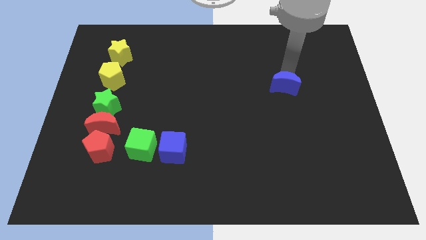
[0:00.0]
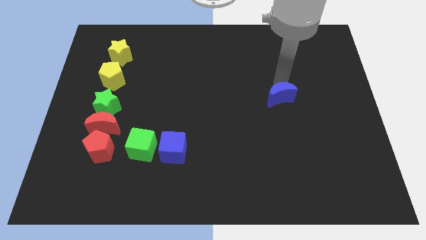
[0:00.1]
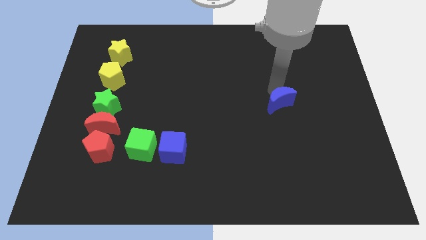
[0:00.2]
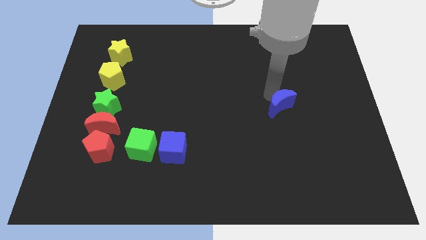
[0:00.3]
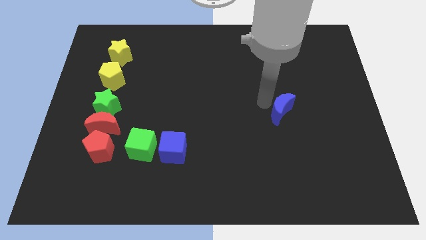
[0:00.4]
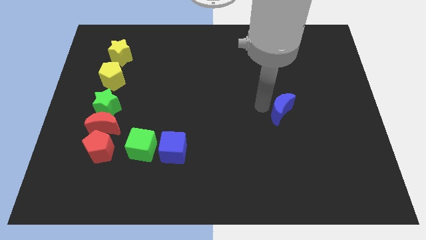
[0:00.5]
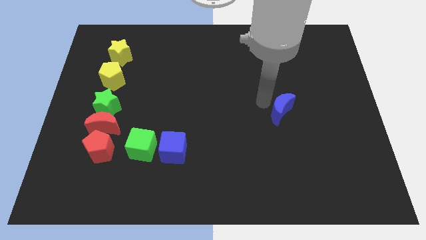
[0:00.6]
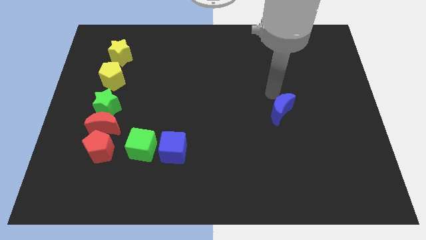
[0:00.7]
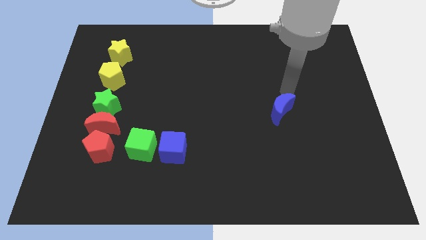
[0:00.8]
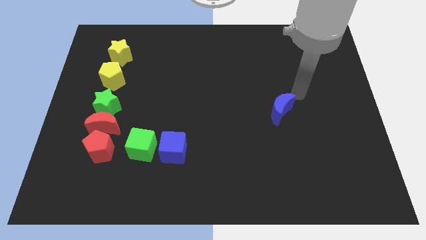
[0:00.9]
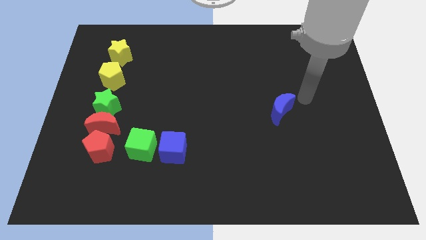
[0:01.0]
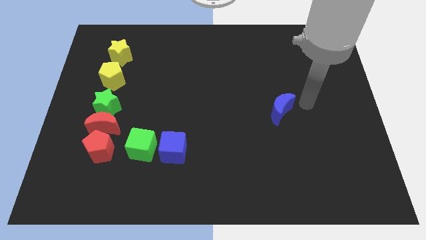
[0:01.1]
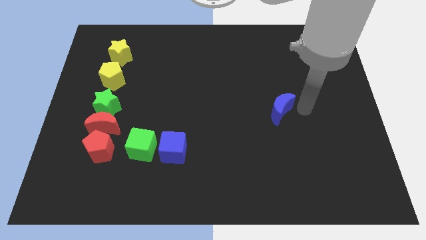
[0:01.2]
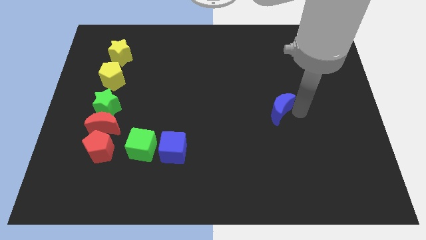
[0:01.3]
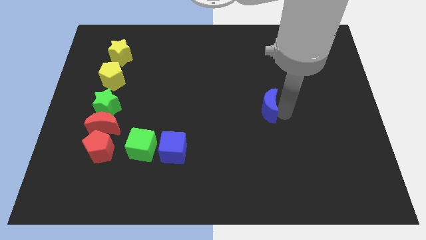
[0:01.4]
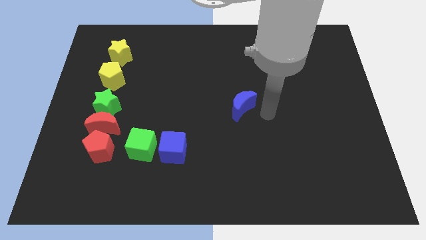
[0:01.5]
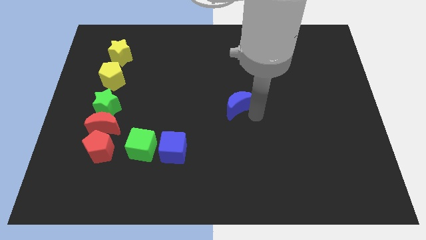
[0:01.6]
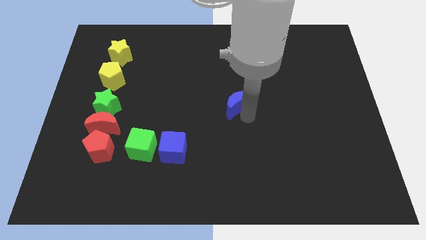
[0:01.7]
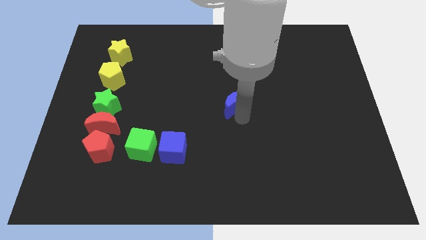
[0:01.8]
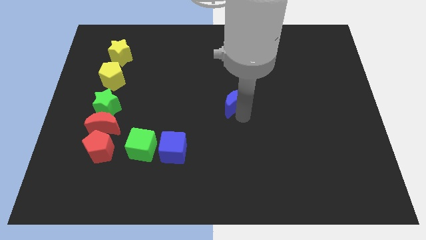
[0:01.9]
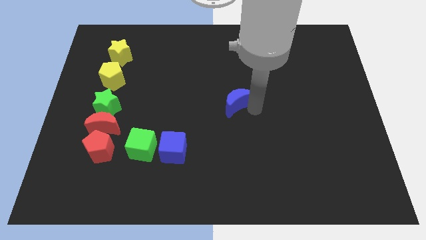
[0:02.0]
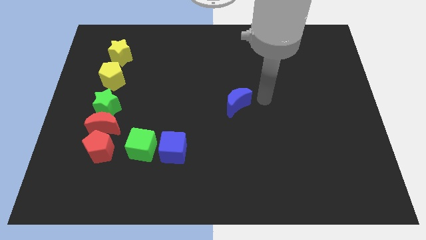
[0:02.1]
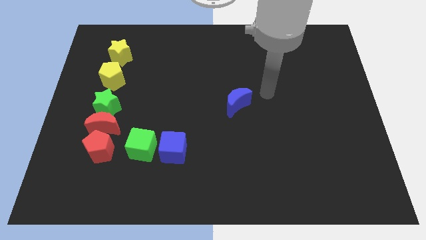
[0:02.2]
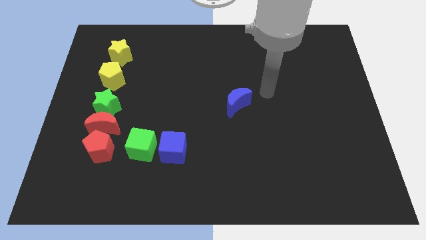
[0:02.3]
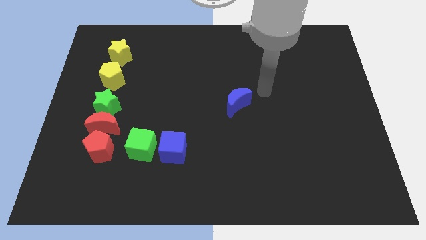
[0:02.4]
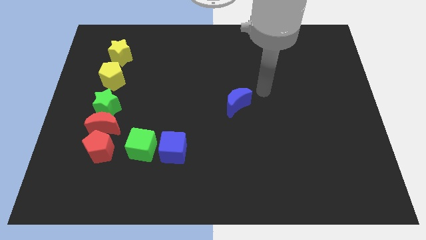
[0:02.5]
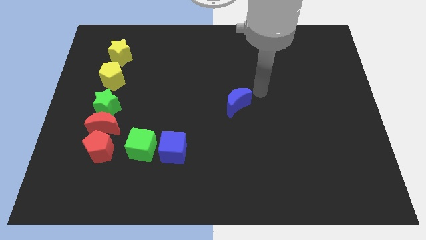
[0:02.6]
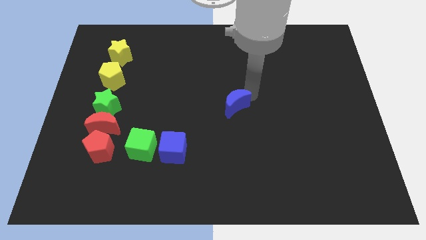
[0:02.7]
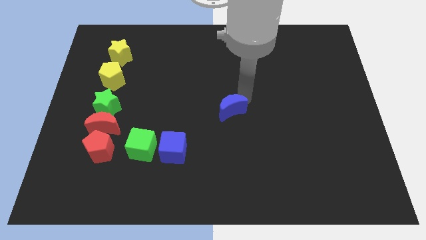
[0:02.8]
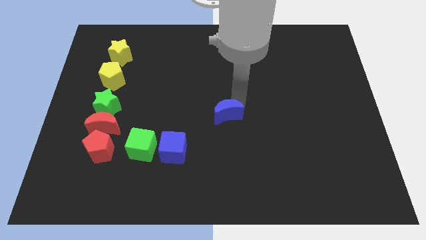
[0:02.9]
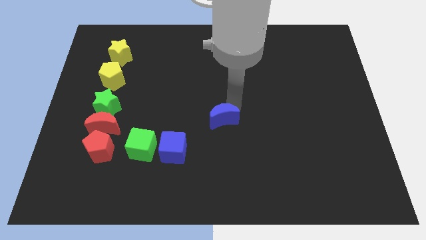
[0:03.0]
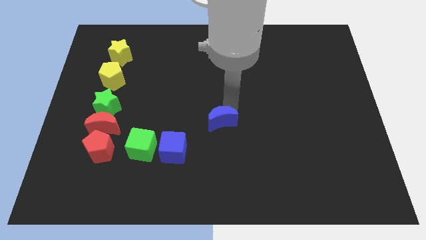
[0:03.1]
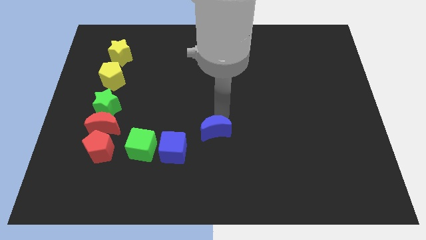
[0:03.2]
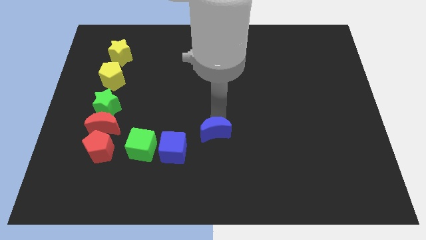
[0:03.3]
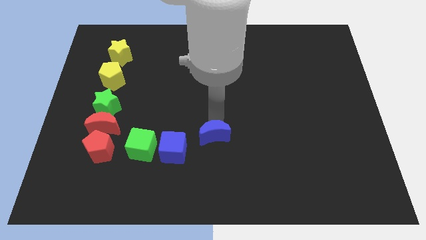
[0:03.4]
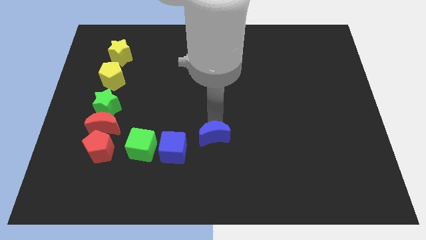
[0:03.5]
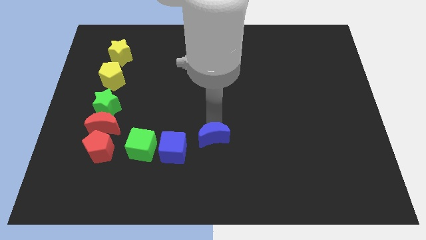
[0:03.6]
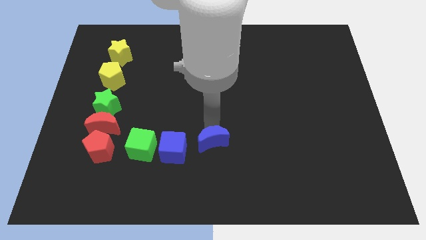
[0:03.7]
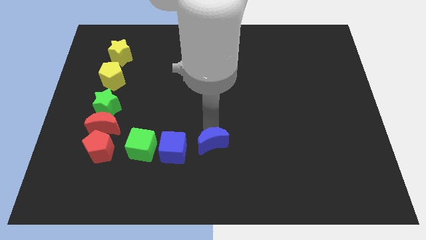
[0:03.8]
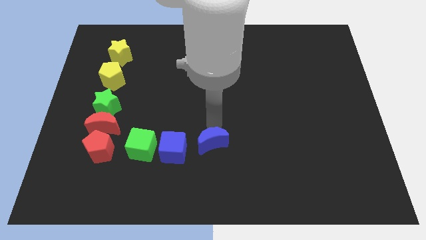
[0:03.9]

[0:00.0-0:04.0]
place the blue moon right to the blue cube

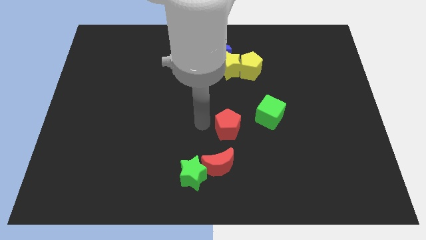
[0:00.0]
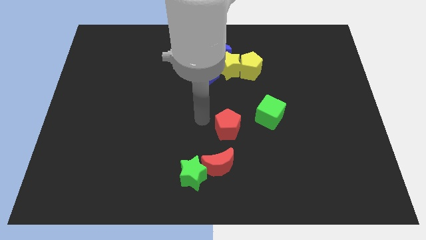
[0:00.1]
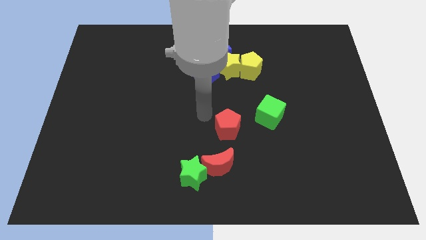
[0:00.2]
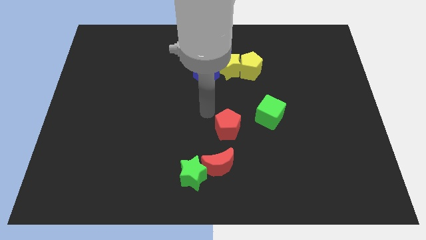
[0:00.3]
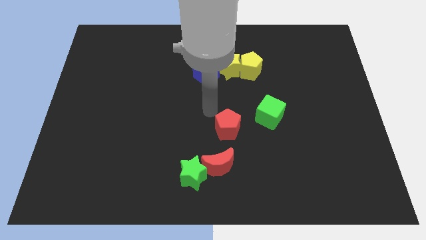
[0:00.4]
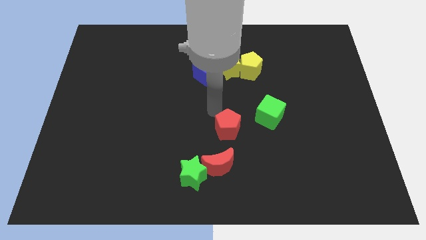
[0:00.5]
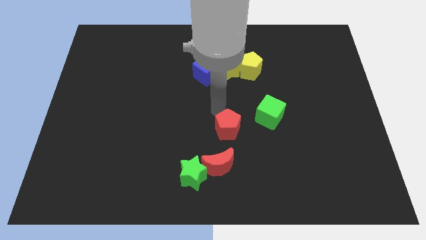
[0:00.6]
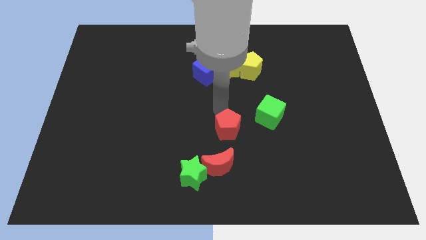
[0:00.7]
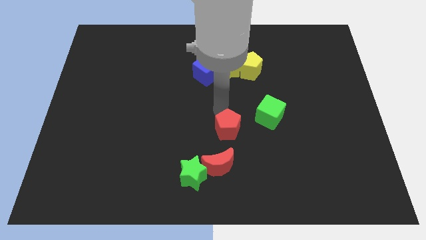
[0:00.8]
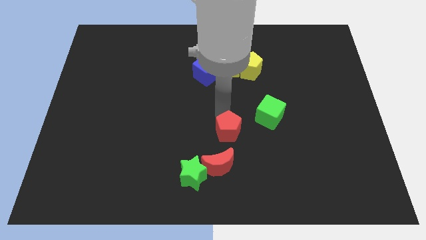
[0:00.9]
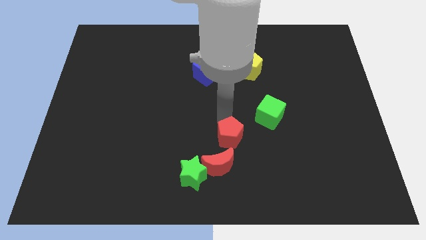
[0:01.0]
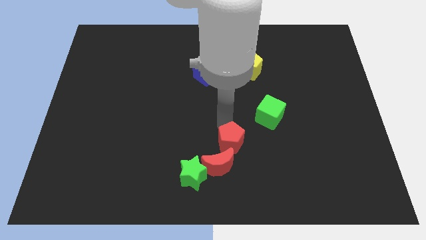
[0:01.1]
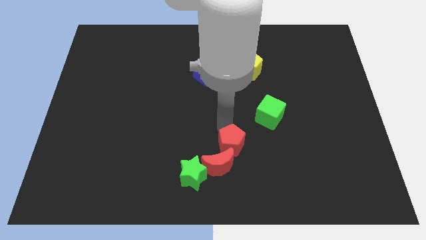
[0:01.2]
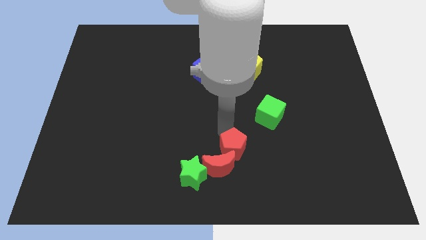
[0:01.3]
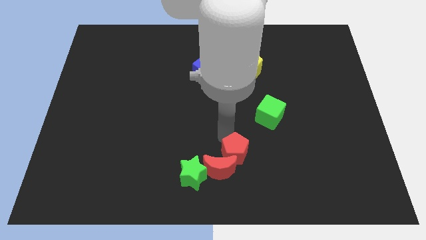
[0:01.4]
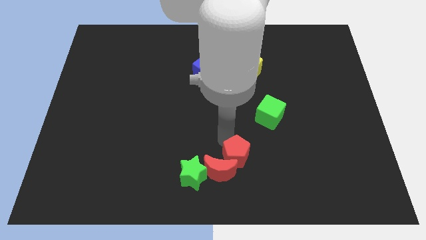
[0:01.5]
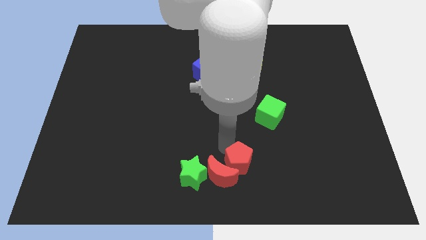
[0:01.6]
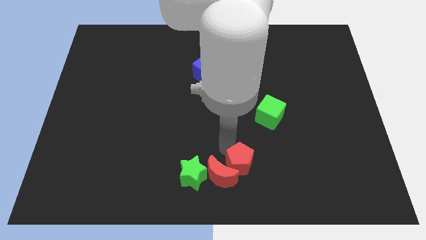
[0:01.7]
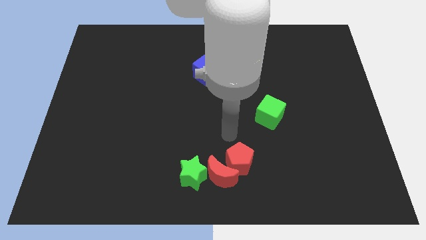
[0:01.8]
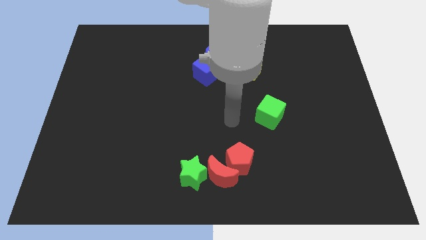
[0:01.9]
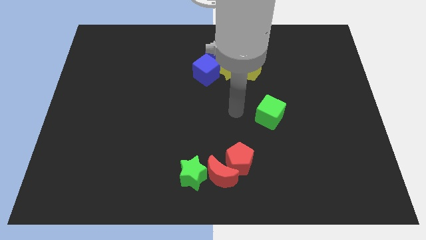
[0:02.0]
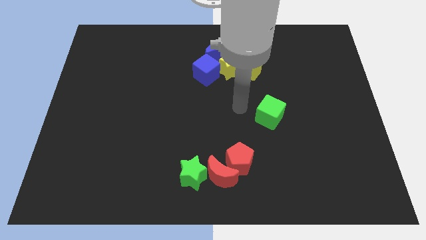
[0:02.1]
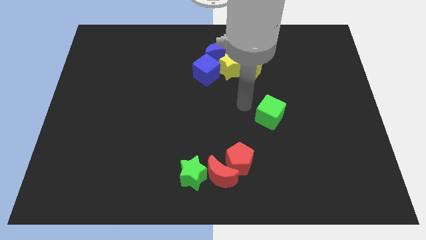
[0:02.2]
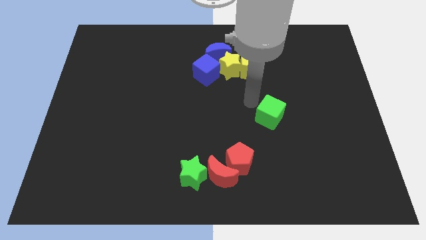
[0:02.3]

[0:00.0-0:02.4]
push the red pentagon into the red moon on top

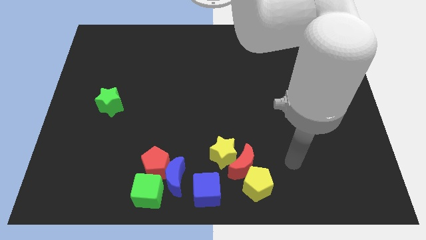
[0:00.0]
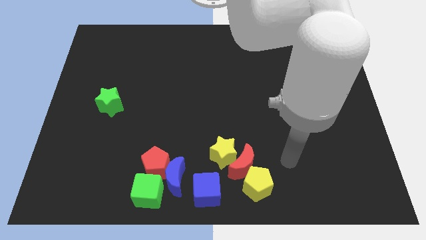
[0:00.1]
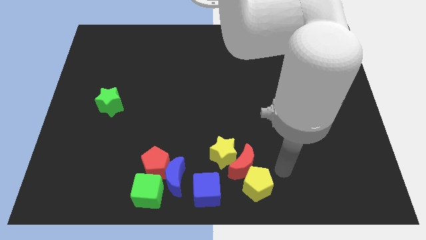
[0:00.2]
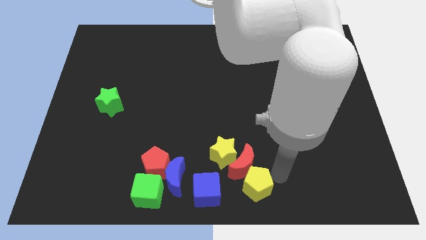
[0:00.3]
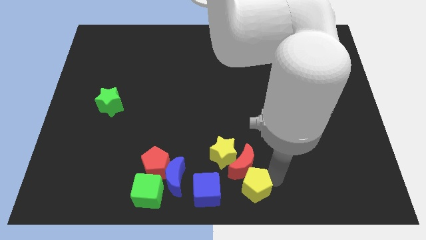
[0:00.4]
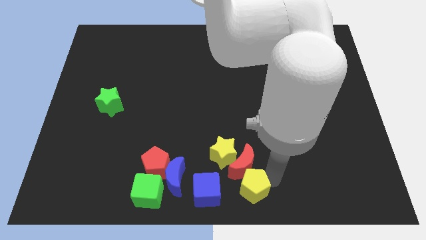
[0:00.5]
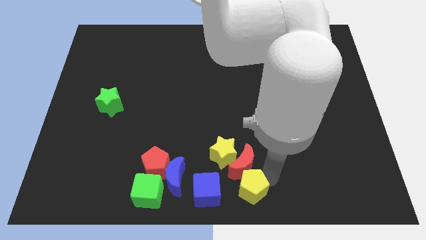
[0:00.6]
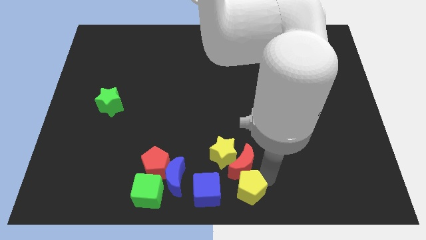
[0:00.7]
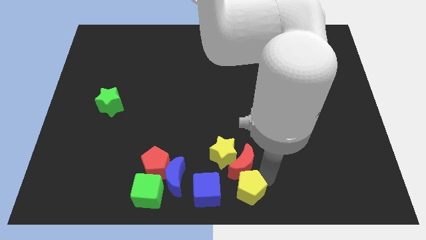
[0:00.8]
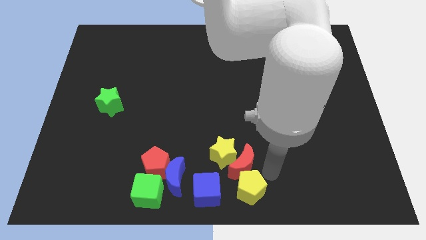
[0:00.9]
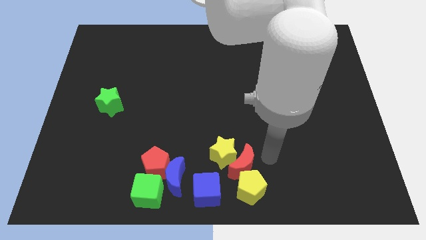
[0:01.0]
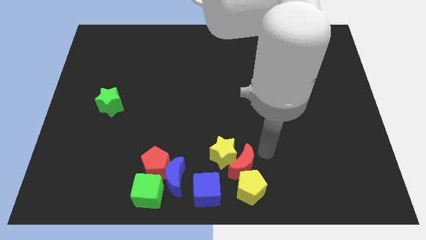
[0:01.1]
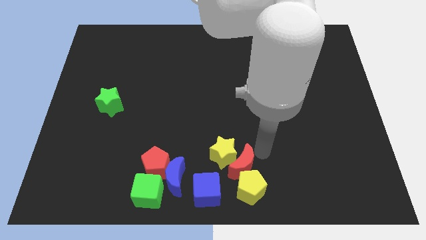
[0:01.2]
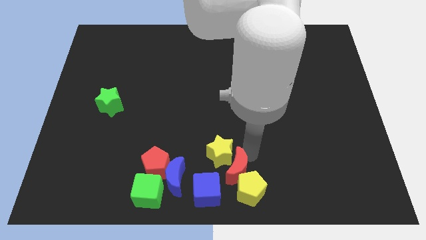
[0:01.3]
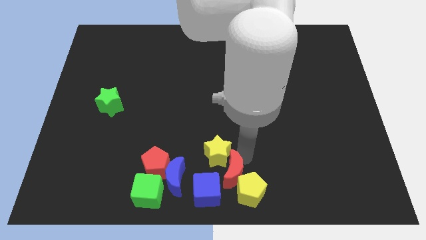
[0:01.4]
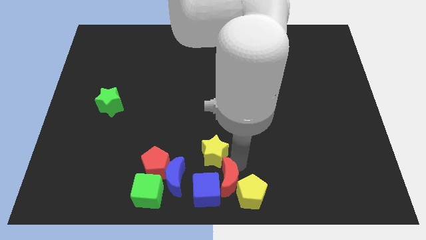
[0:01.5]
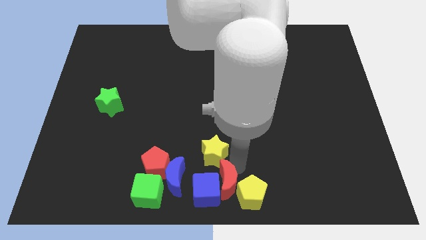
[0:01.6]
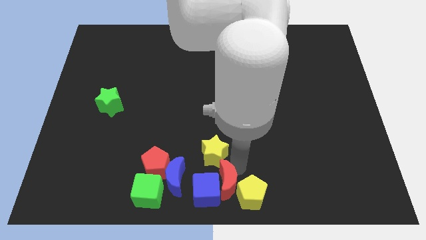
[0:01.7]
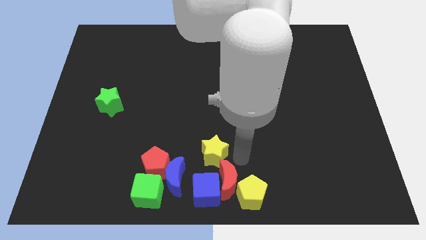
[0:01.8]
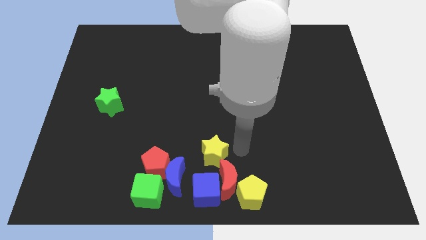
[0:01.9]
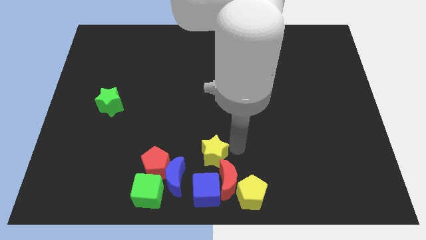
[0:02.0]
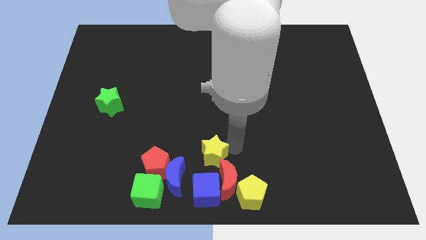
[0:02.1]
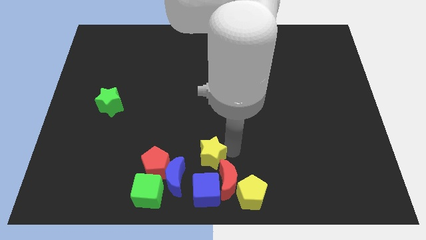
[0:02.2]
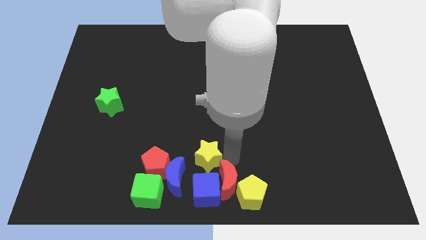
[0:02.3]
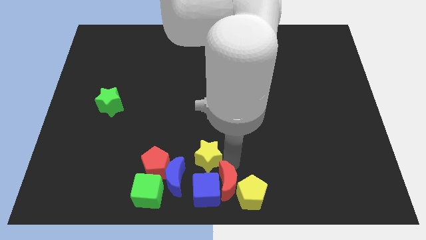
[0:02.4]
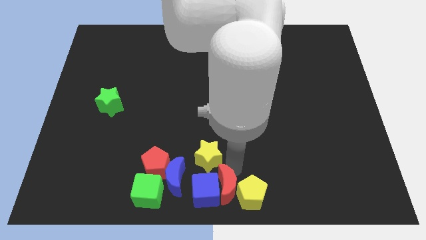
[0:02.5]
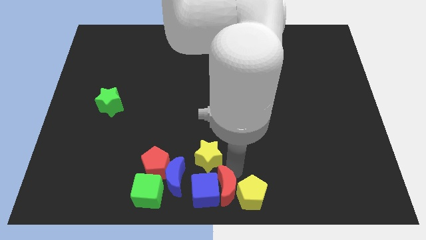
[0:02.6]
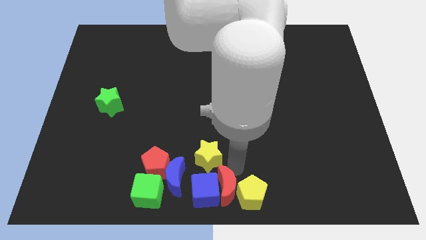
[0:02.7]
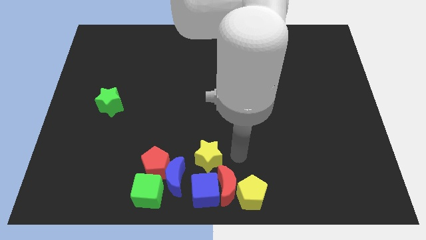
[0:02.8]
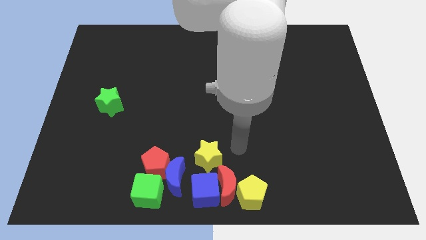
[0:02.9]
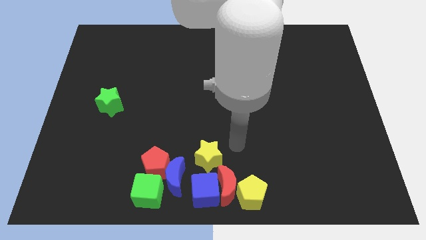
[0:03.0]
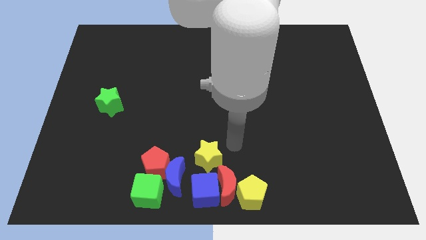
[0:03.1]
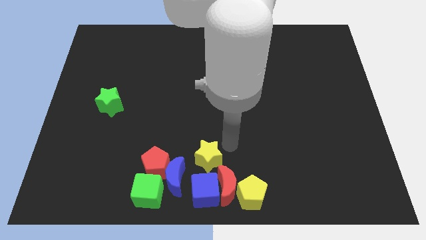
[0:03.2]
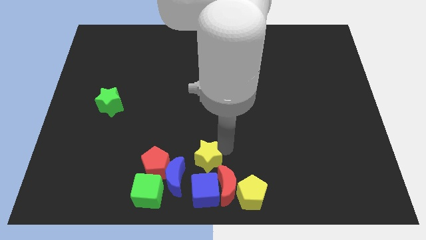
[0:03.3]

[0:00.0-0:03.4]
slide the yellow blocks and red moon into the group of blocks
